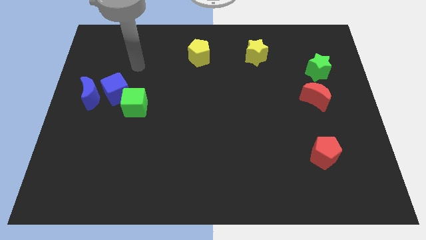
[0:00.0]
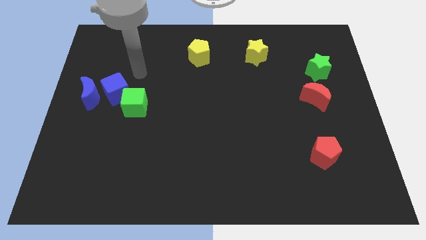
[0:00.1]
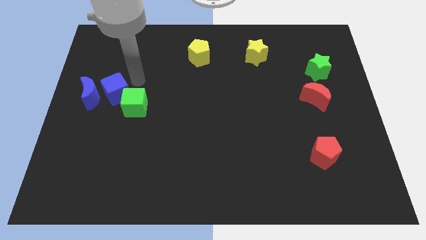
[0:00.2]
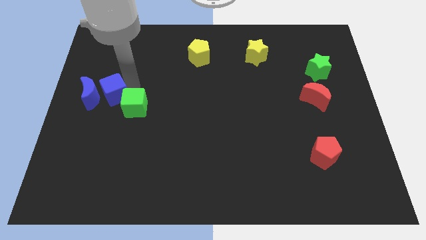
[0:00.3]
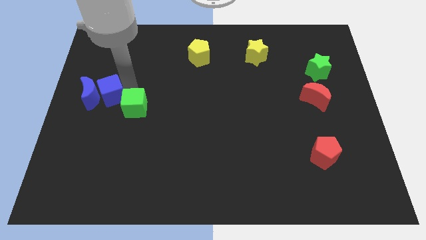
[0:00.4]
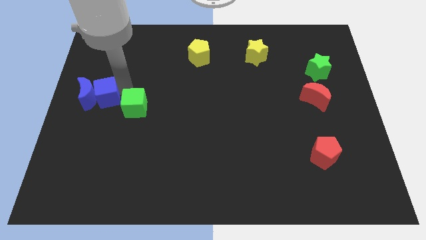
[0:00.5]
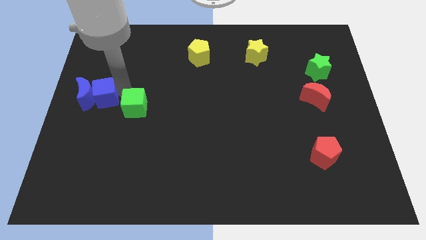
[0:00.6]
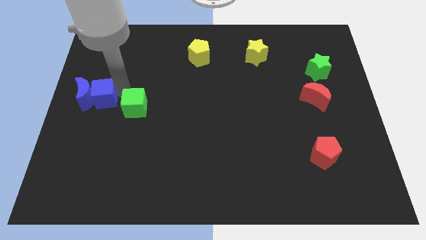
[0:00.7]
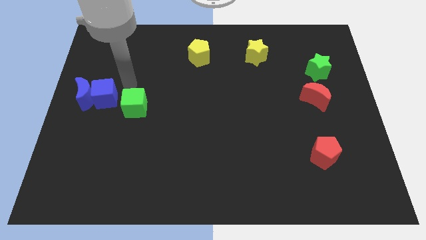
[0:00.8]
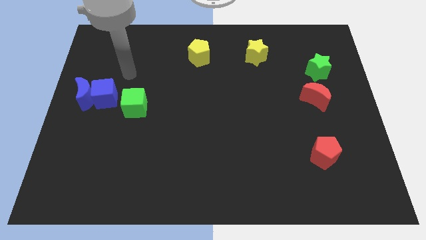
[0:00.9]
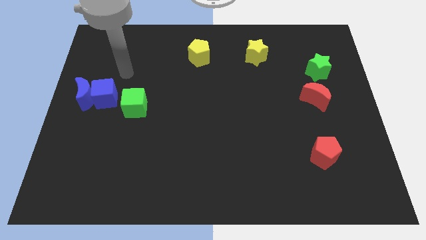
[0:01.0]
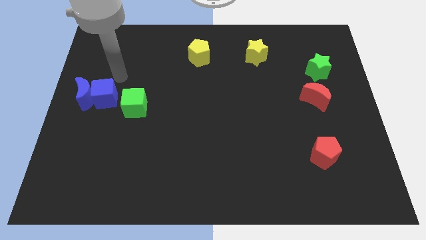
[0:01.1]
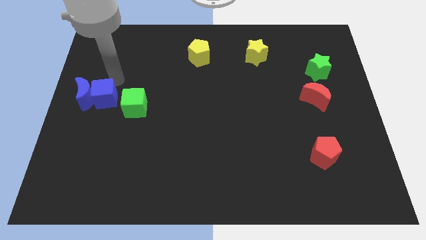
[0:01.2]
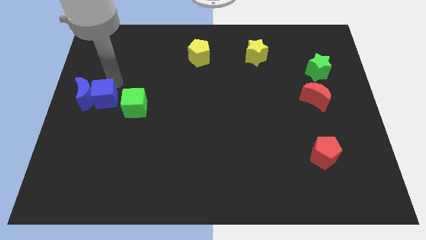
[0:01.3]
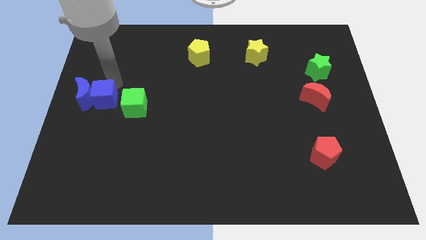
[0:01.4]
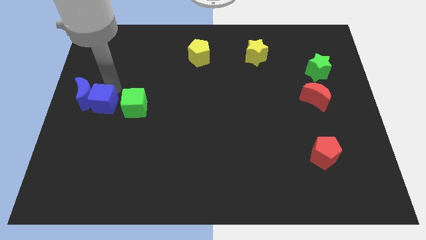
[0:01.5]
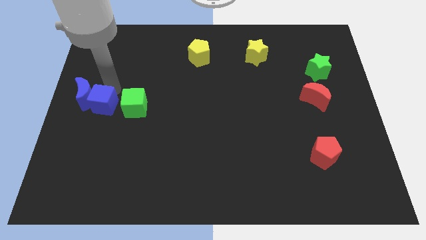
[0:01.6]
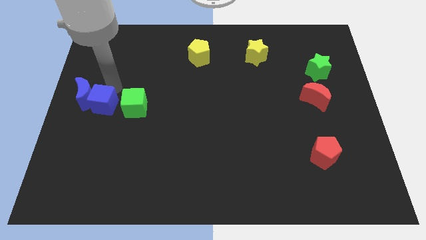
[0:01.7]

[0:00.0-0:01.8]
push the blue cube into the blue crescent

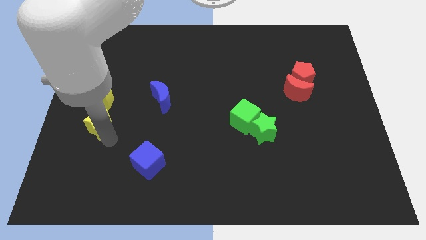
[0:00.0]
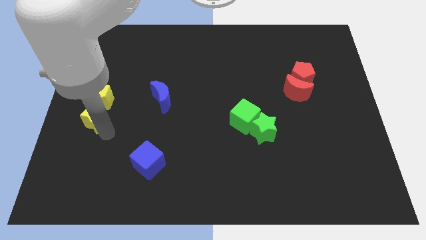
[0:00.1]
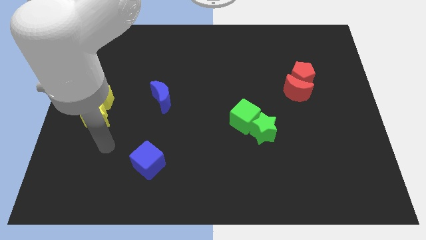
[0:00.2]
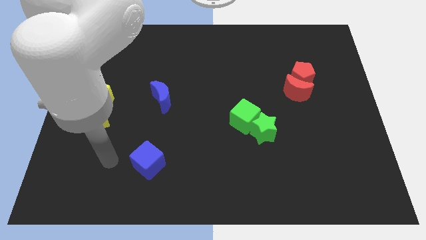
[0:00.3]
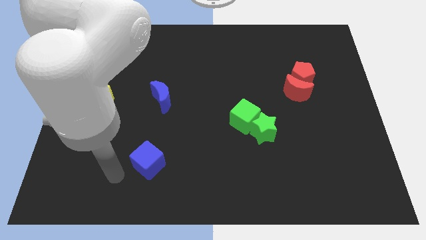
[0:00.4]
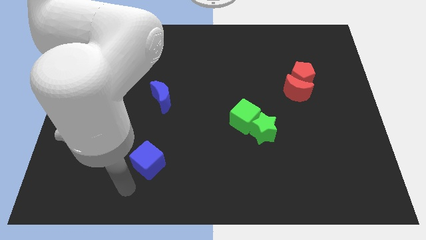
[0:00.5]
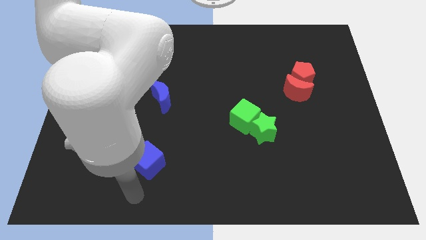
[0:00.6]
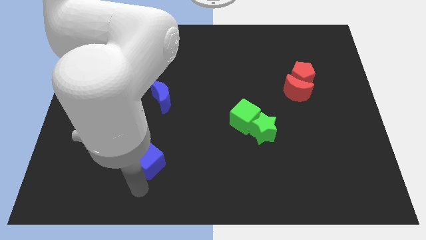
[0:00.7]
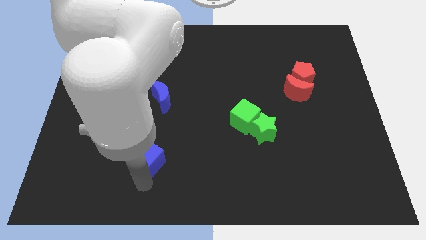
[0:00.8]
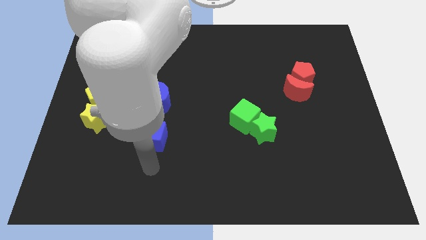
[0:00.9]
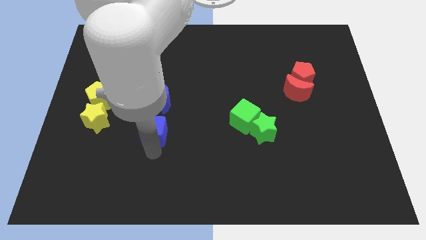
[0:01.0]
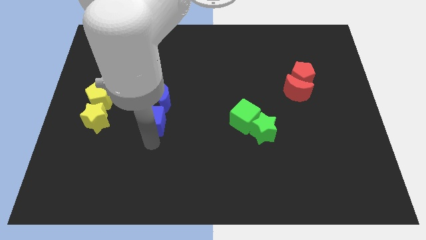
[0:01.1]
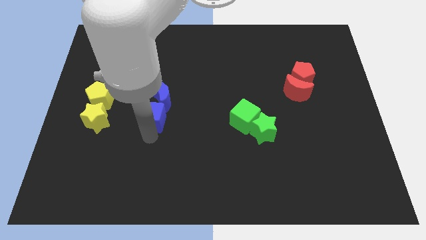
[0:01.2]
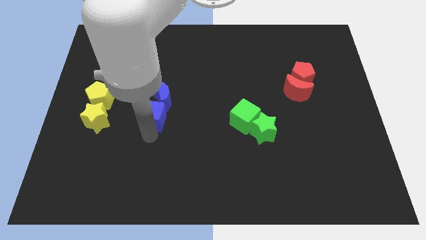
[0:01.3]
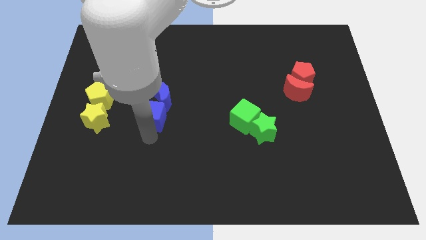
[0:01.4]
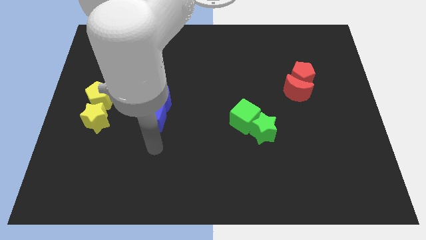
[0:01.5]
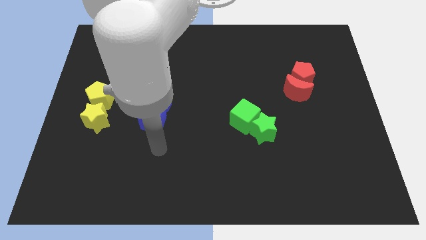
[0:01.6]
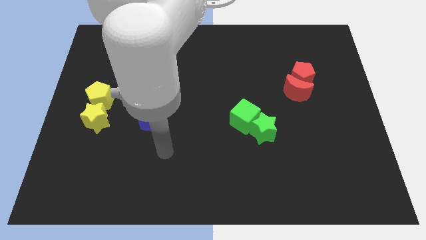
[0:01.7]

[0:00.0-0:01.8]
place the blue cube towards the bottom of the blue crescent

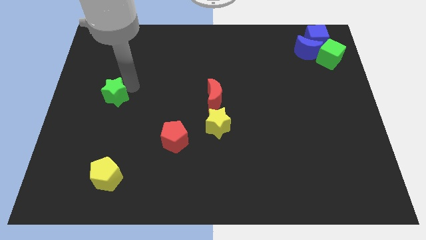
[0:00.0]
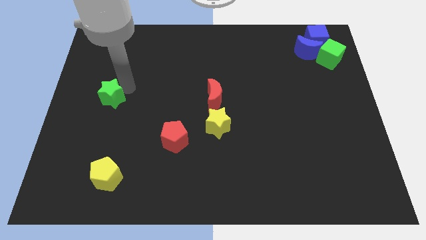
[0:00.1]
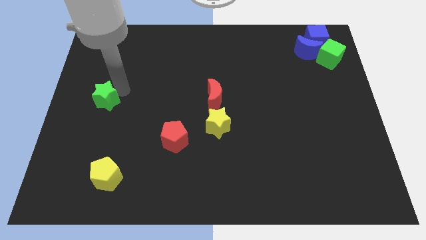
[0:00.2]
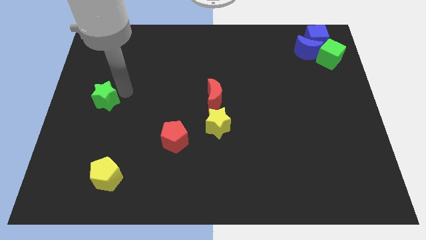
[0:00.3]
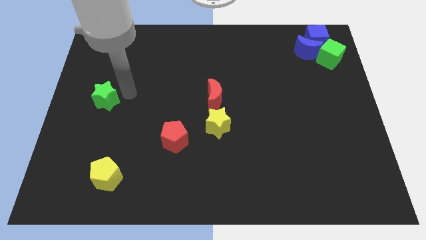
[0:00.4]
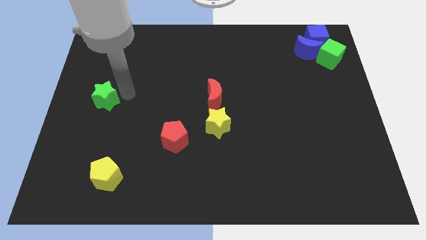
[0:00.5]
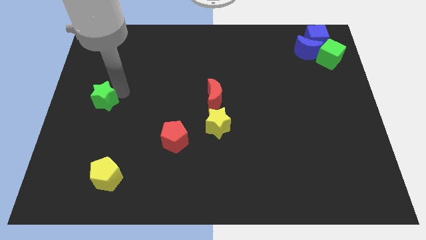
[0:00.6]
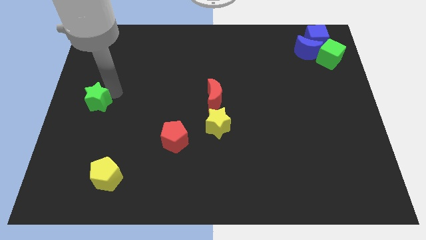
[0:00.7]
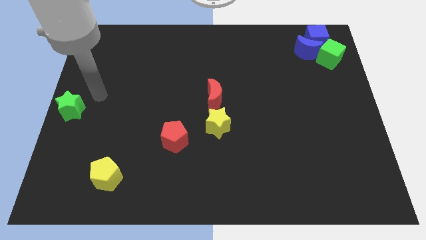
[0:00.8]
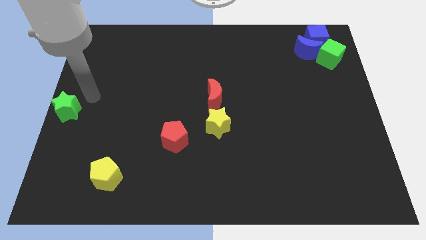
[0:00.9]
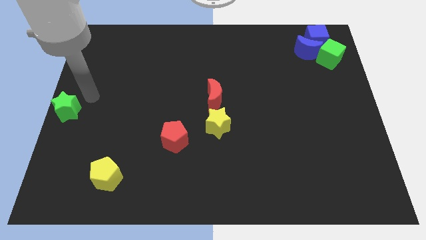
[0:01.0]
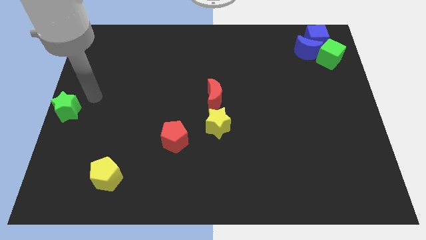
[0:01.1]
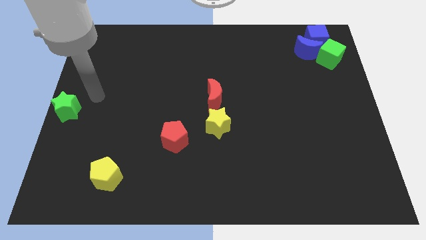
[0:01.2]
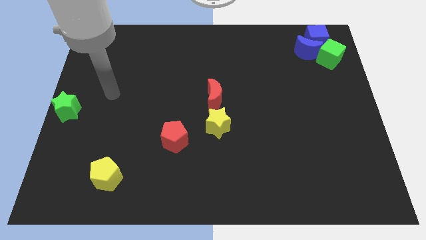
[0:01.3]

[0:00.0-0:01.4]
place the green star at the center left side of the board

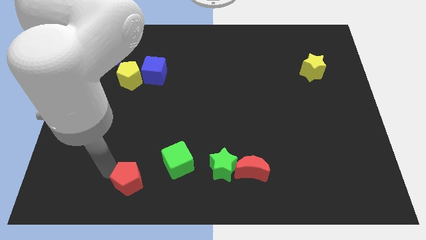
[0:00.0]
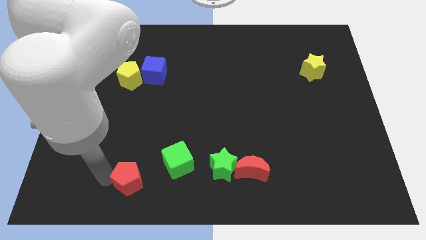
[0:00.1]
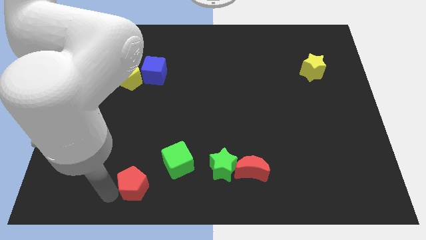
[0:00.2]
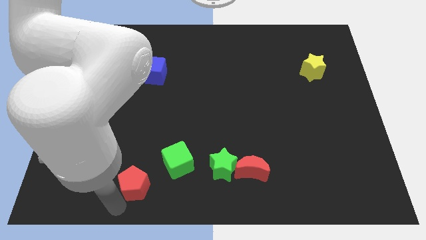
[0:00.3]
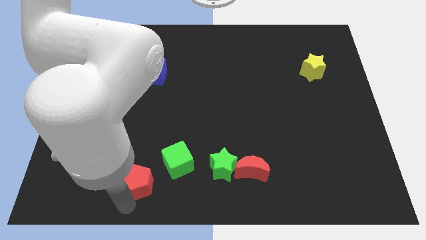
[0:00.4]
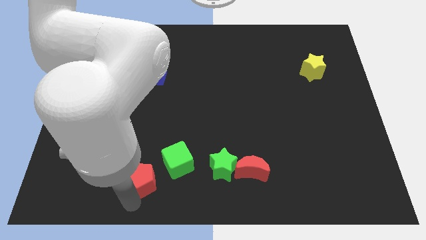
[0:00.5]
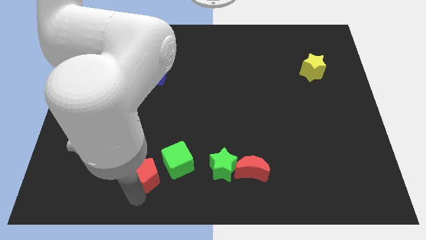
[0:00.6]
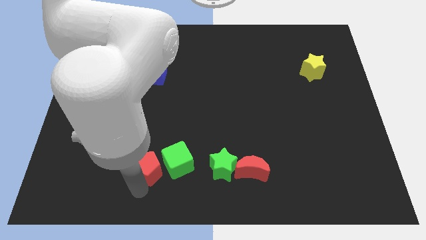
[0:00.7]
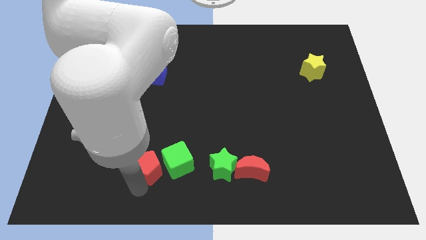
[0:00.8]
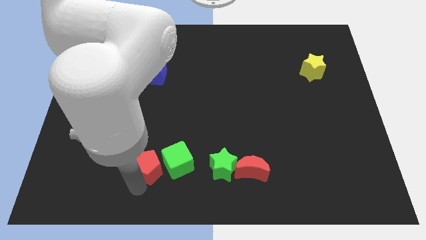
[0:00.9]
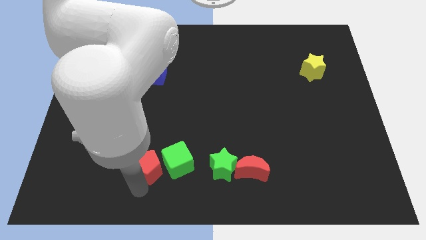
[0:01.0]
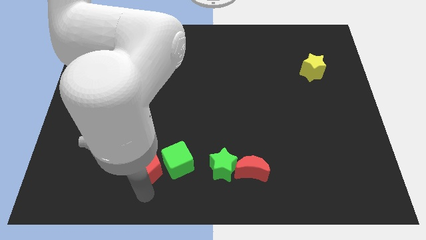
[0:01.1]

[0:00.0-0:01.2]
move the red pentagon left to the green cube

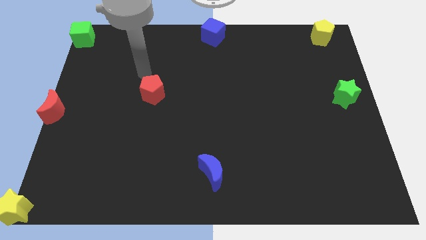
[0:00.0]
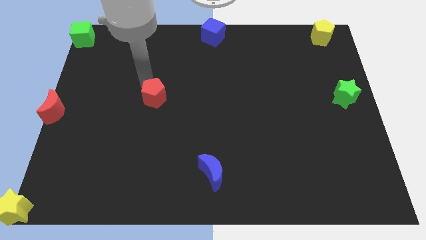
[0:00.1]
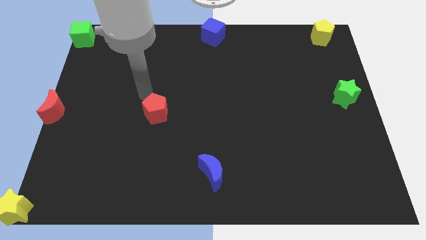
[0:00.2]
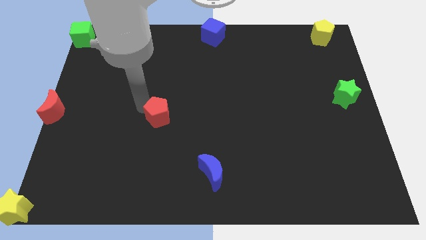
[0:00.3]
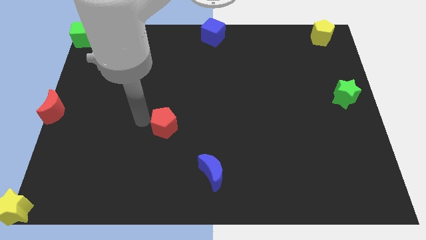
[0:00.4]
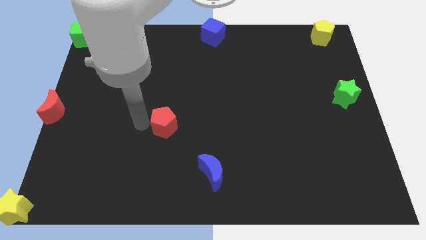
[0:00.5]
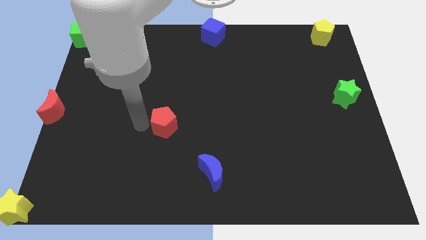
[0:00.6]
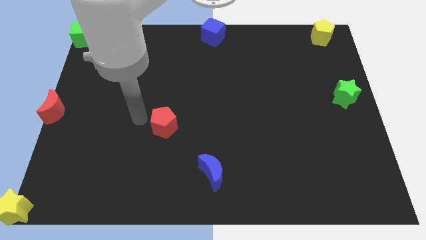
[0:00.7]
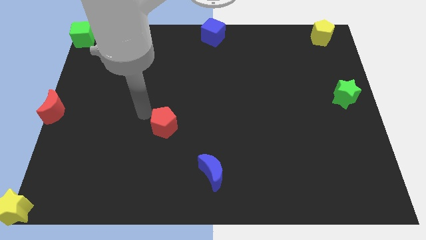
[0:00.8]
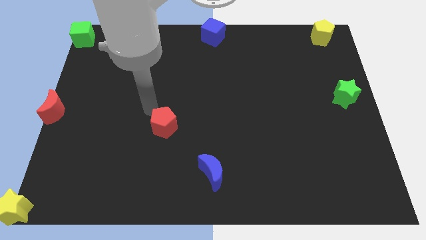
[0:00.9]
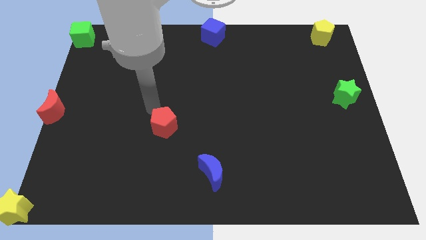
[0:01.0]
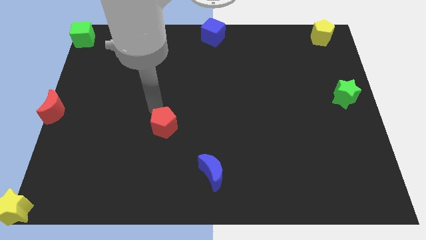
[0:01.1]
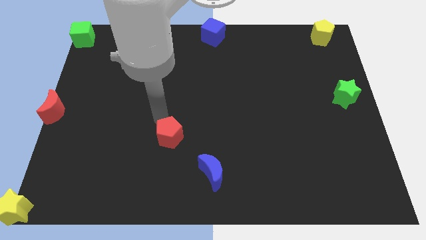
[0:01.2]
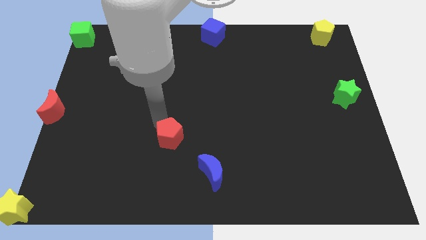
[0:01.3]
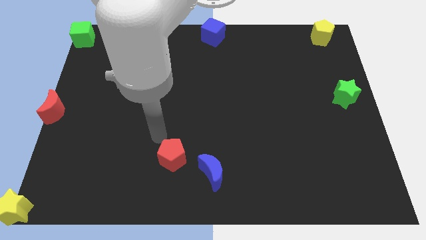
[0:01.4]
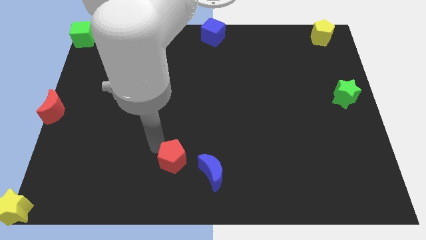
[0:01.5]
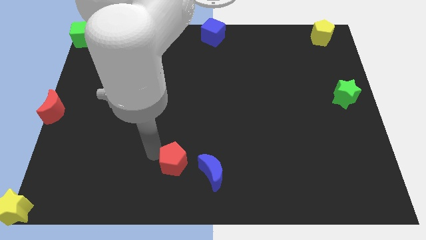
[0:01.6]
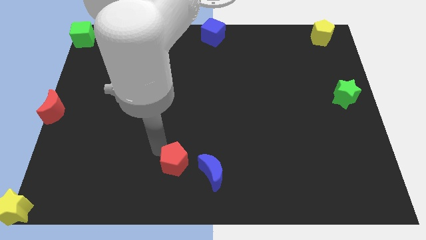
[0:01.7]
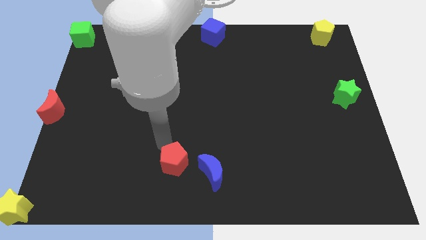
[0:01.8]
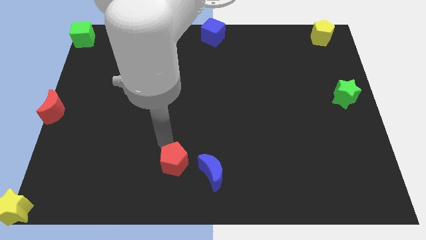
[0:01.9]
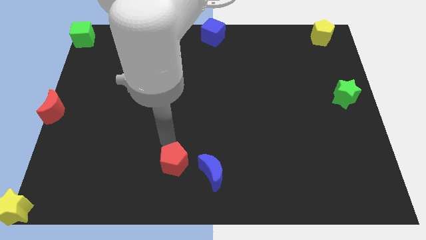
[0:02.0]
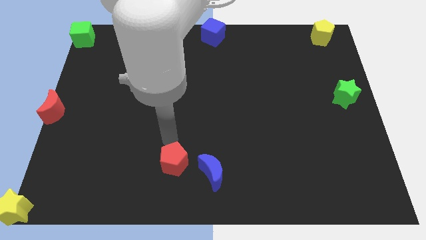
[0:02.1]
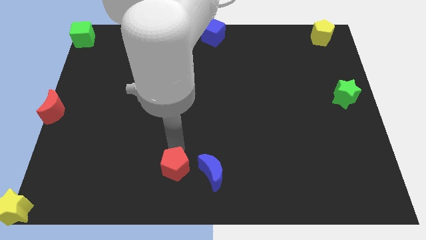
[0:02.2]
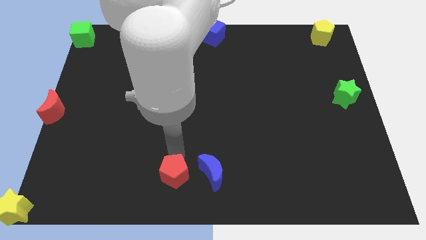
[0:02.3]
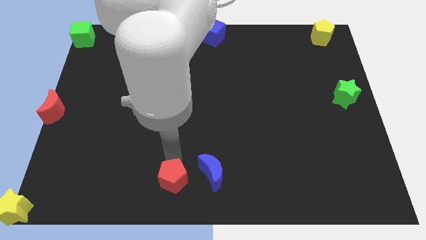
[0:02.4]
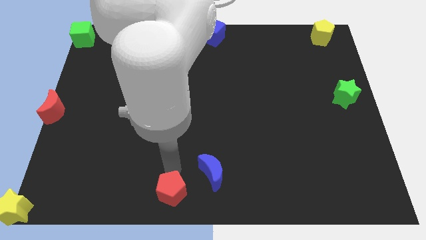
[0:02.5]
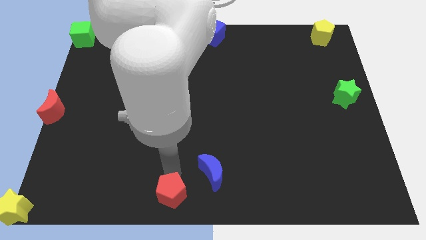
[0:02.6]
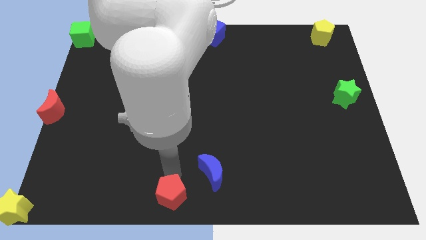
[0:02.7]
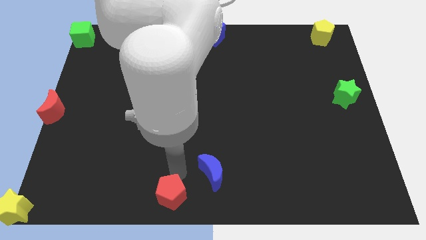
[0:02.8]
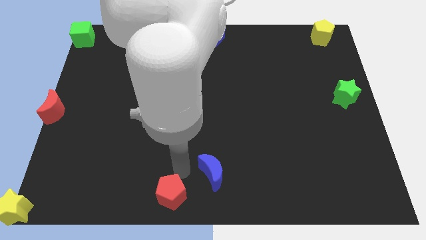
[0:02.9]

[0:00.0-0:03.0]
move the red pentagon to the bottom center
